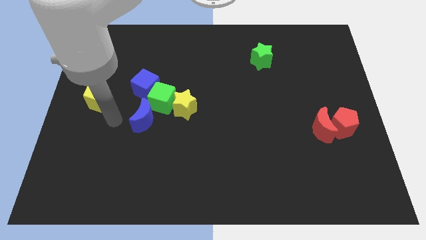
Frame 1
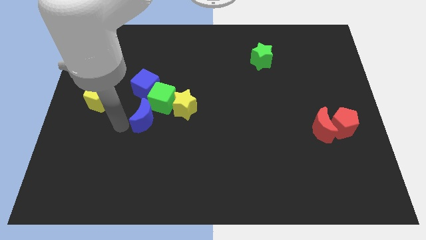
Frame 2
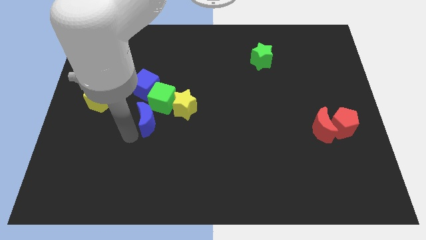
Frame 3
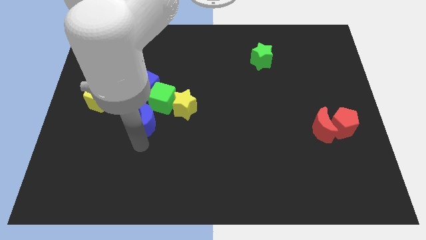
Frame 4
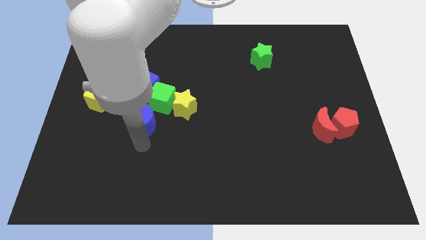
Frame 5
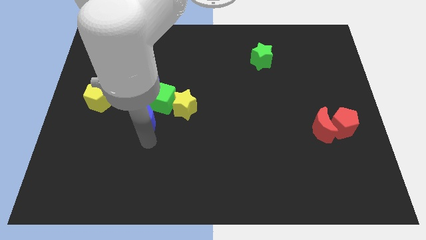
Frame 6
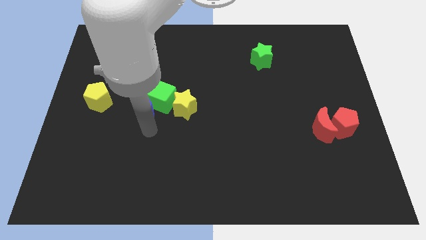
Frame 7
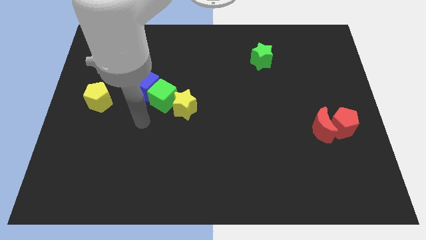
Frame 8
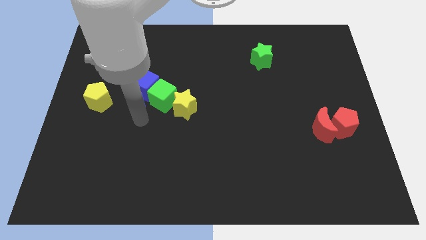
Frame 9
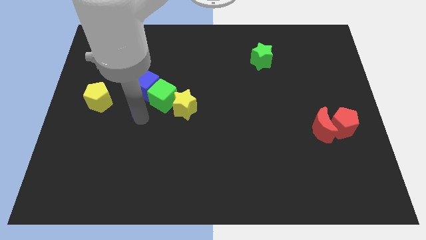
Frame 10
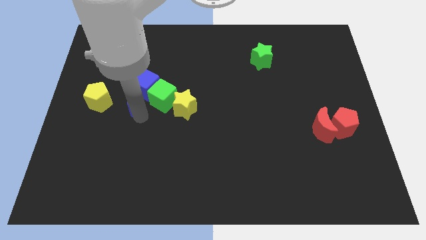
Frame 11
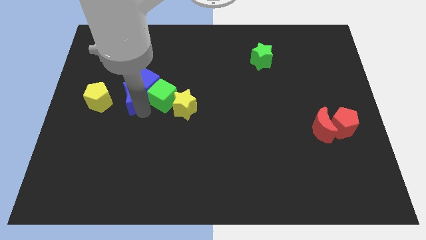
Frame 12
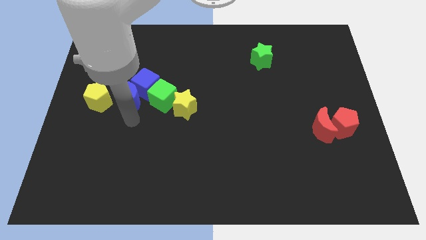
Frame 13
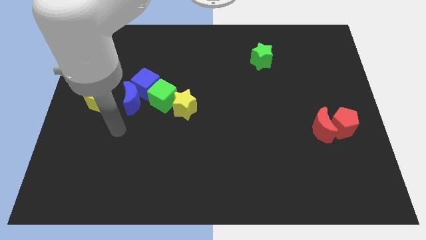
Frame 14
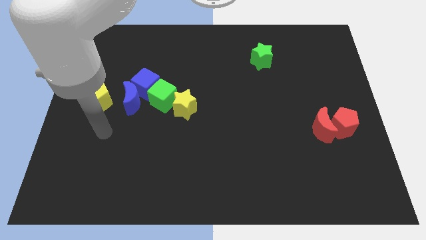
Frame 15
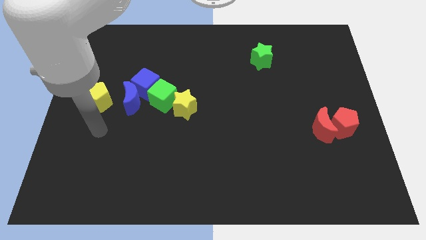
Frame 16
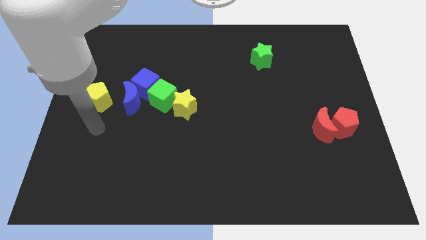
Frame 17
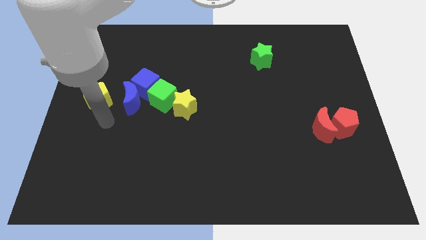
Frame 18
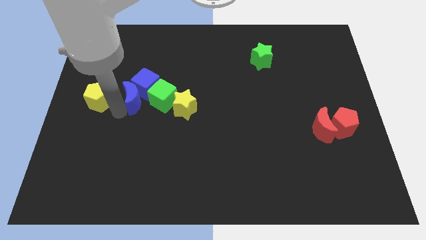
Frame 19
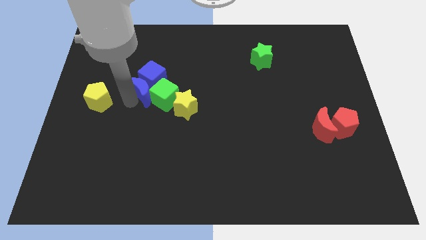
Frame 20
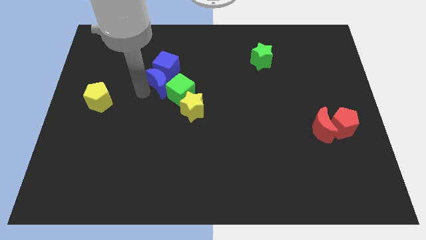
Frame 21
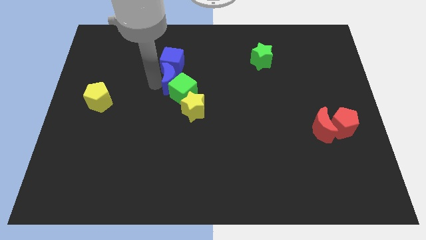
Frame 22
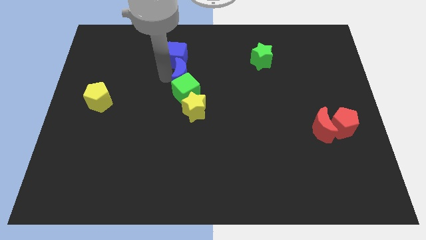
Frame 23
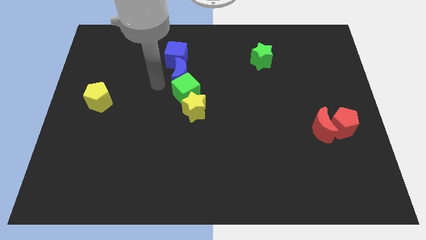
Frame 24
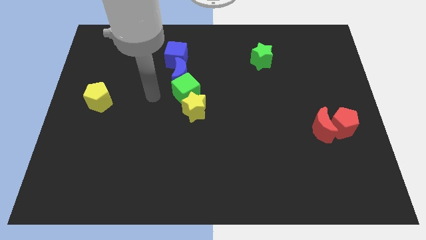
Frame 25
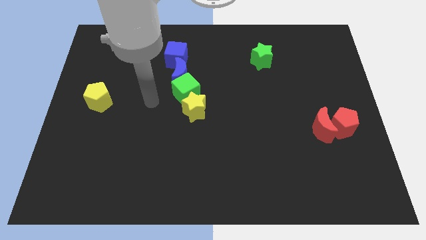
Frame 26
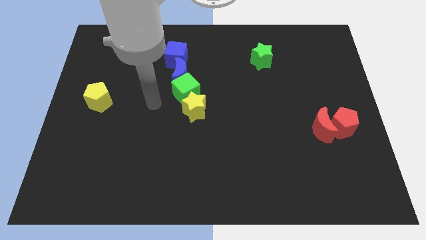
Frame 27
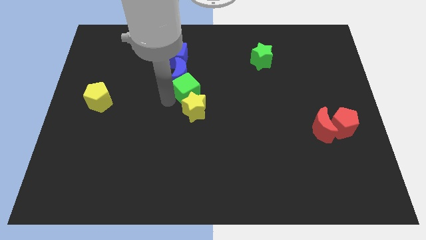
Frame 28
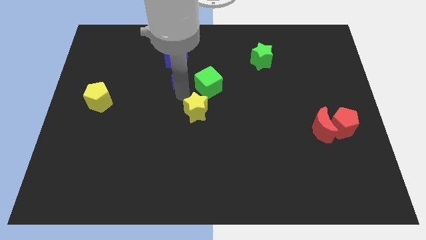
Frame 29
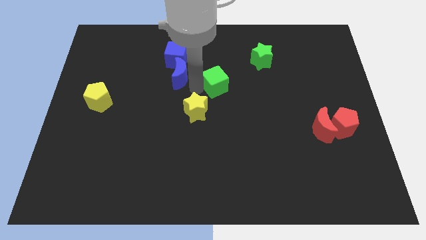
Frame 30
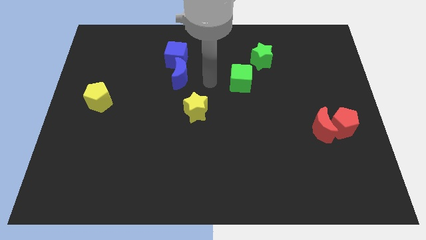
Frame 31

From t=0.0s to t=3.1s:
separate the green cube and blue cube

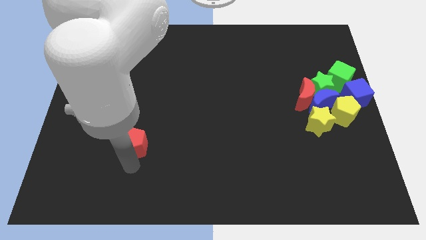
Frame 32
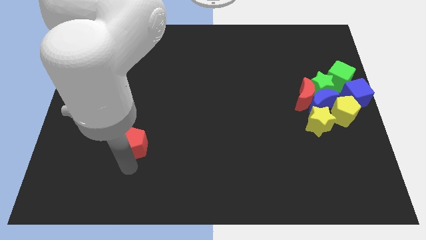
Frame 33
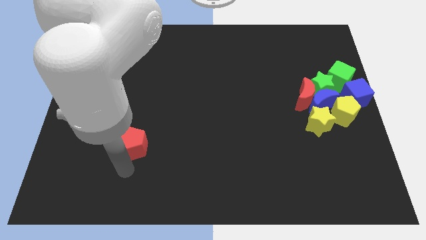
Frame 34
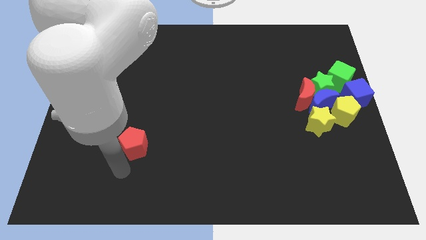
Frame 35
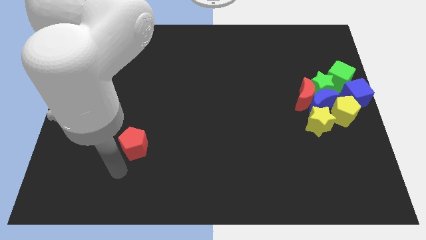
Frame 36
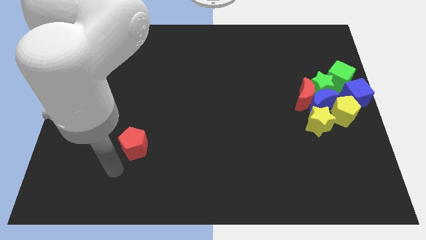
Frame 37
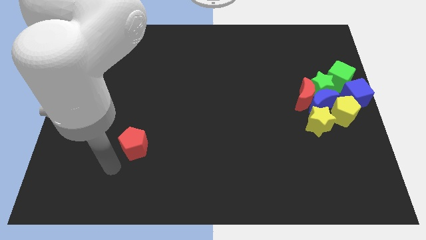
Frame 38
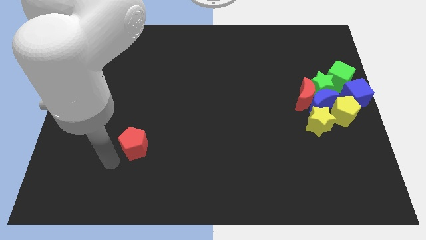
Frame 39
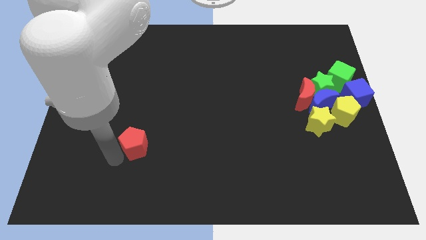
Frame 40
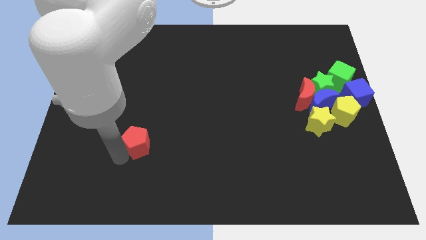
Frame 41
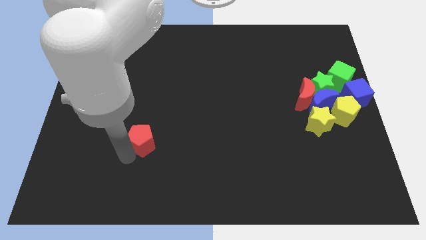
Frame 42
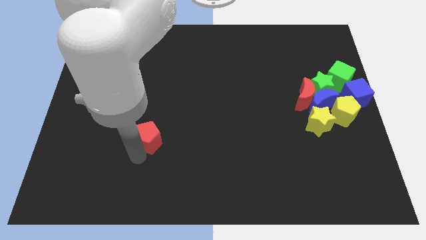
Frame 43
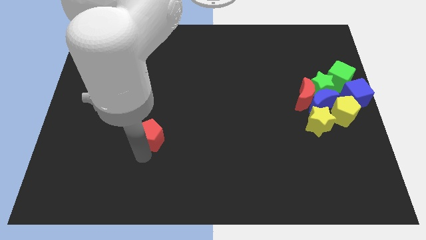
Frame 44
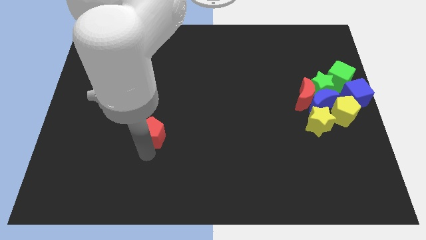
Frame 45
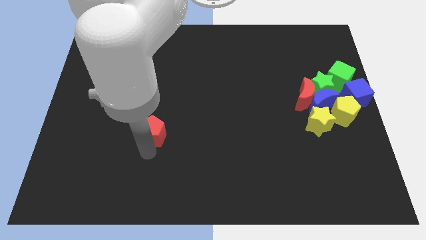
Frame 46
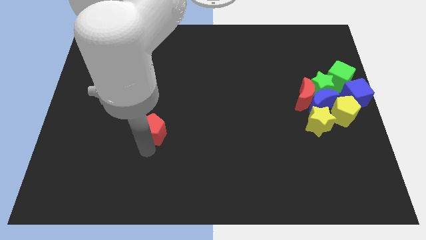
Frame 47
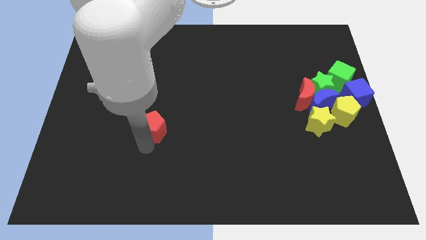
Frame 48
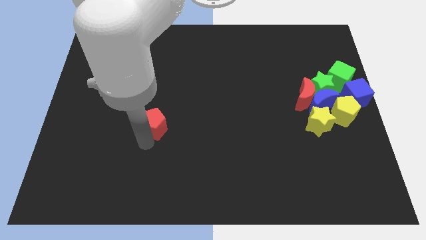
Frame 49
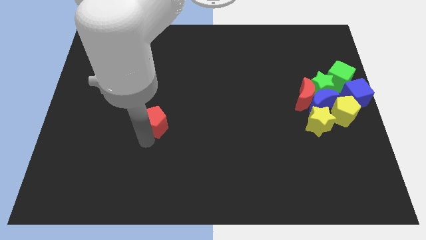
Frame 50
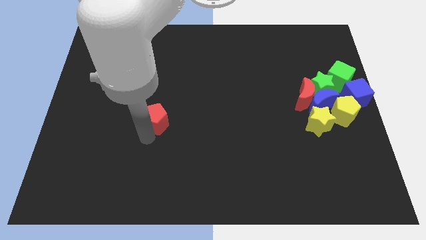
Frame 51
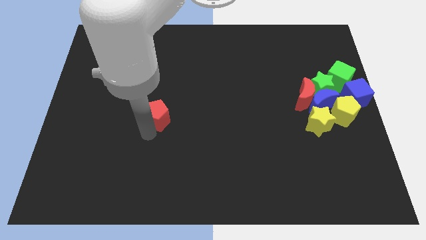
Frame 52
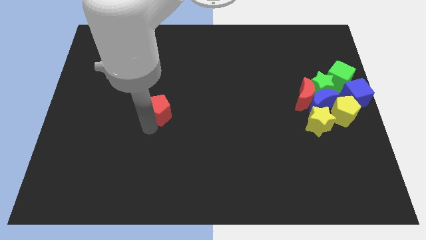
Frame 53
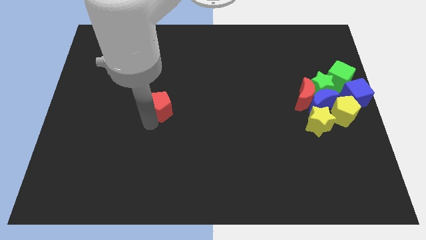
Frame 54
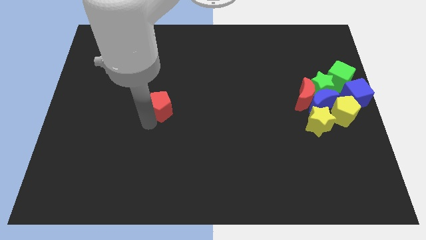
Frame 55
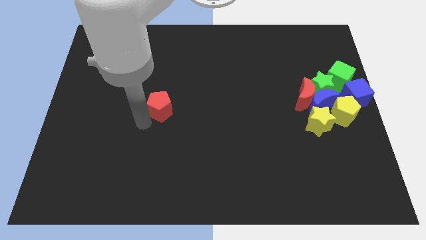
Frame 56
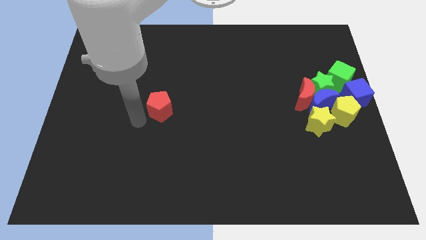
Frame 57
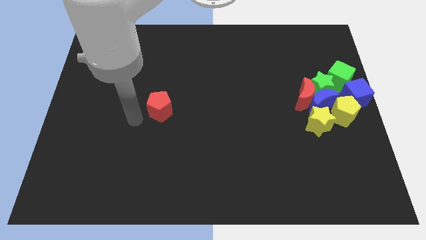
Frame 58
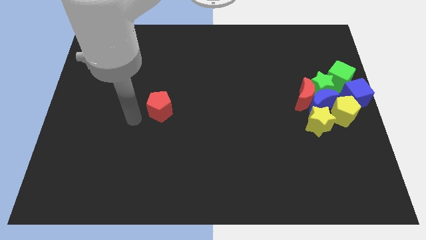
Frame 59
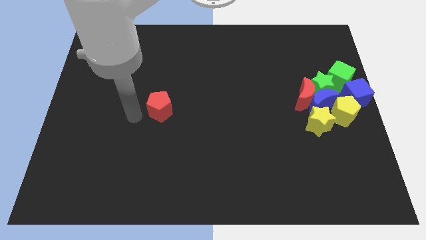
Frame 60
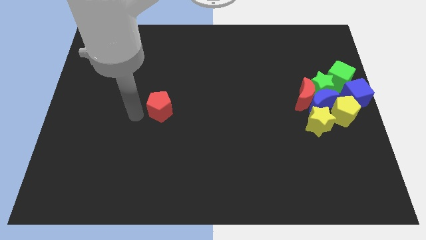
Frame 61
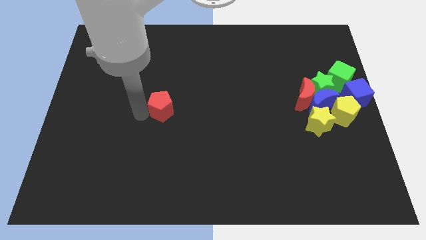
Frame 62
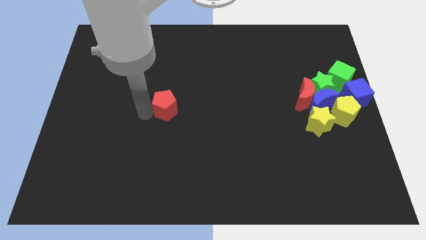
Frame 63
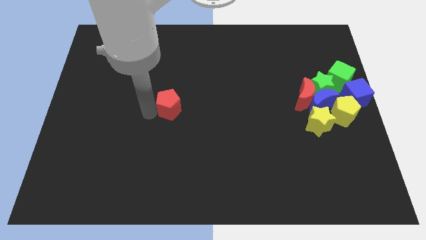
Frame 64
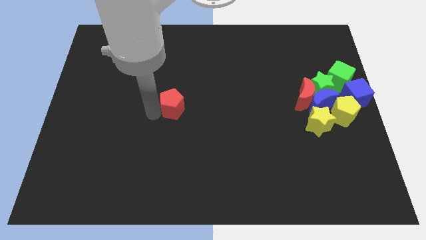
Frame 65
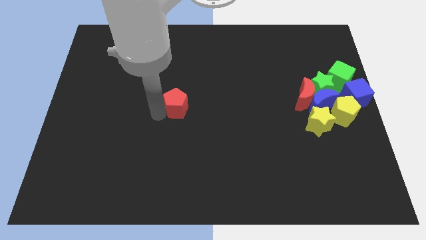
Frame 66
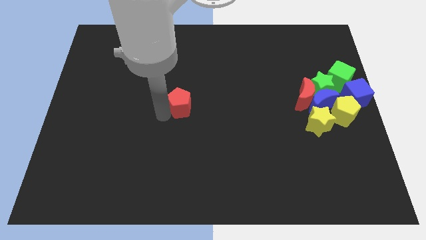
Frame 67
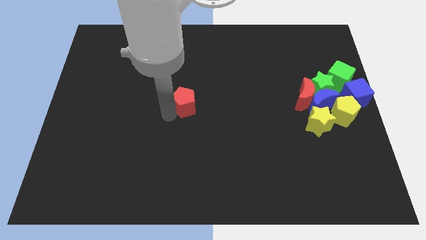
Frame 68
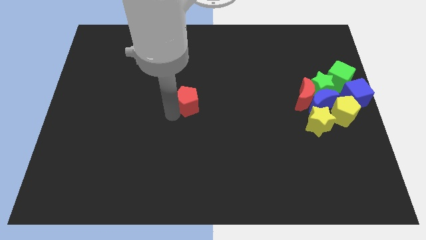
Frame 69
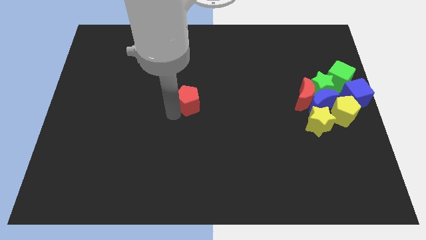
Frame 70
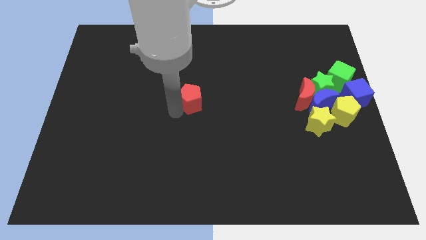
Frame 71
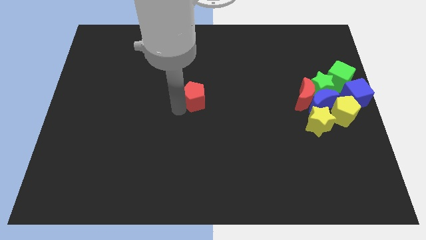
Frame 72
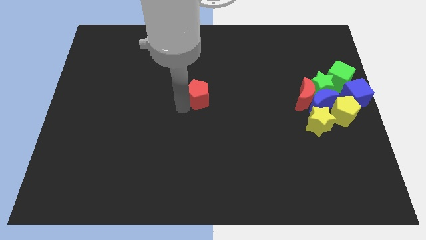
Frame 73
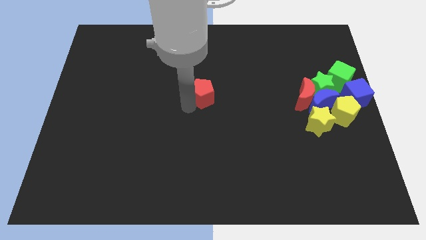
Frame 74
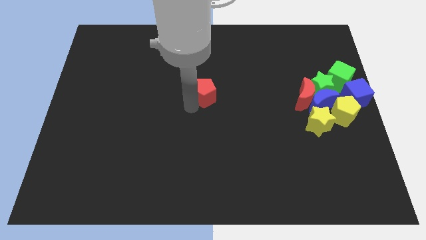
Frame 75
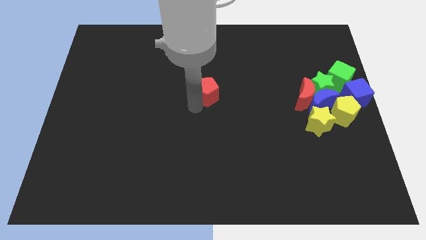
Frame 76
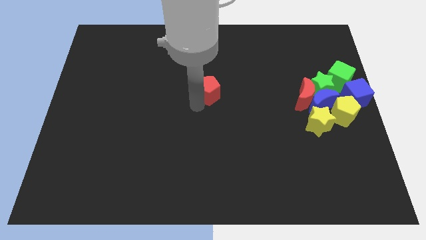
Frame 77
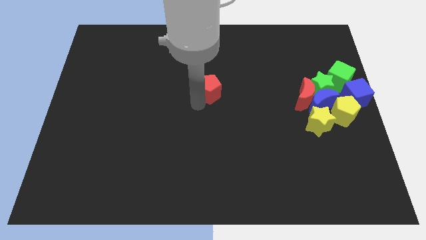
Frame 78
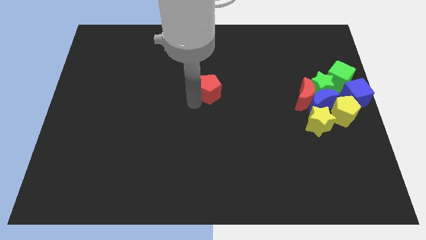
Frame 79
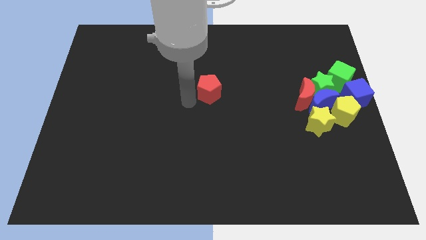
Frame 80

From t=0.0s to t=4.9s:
place the red pentagon at the center of the board

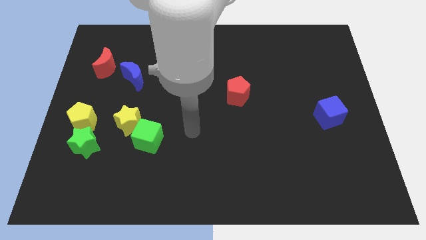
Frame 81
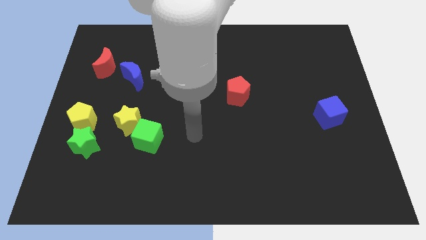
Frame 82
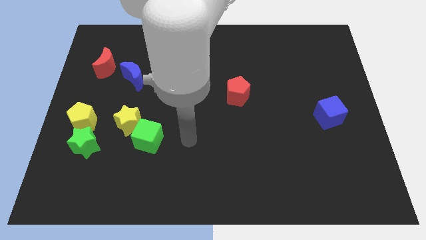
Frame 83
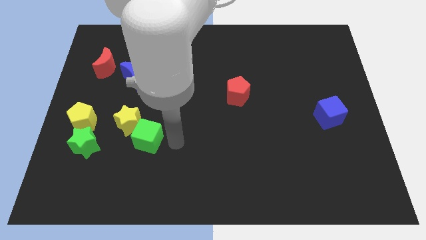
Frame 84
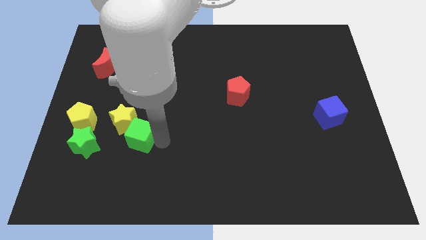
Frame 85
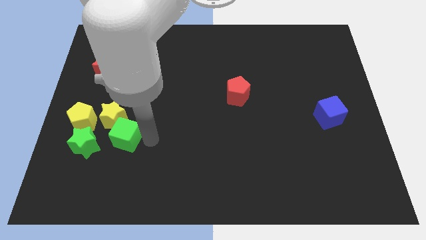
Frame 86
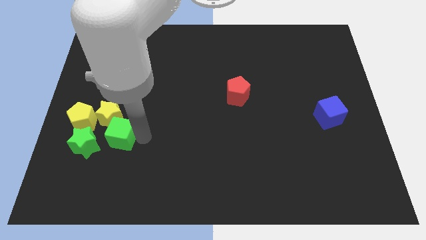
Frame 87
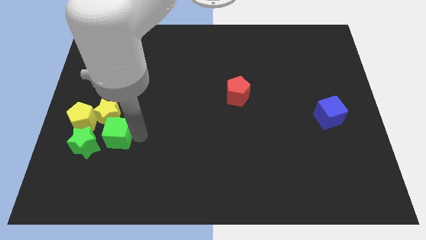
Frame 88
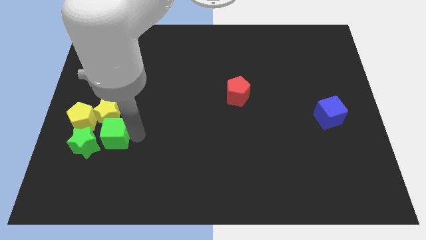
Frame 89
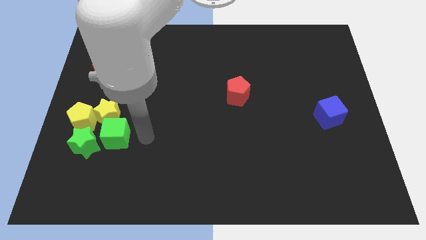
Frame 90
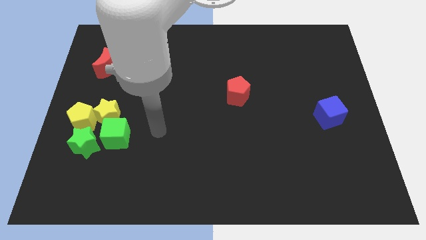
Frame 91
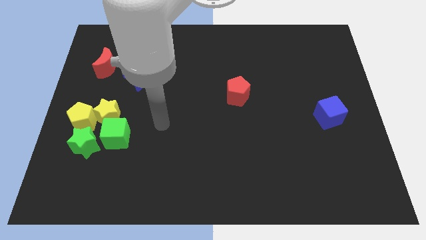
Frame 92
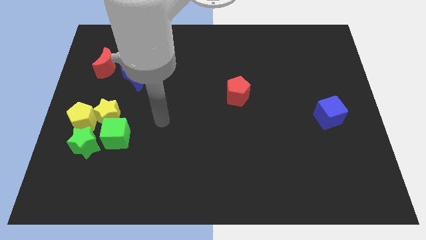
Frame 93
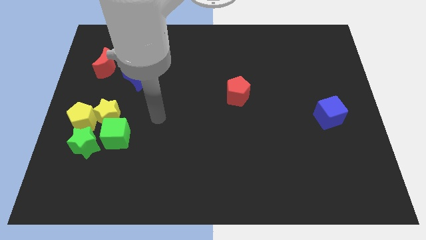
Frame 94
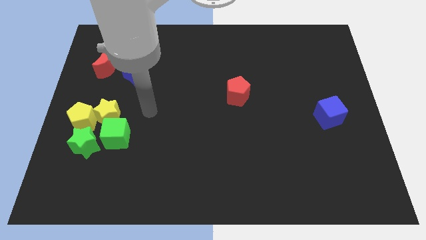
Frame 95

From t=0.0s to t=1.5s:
push the yellow star with the help of a green cube towards the right side of the yellow pentagon
